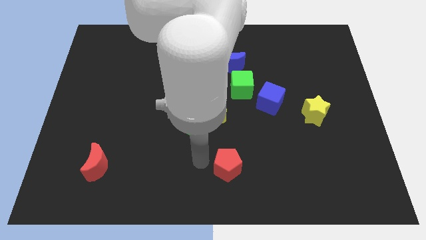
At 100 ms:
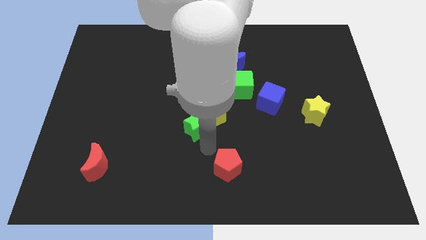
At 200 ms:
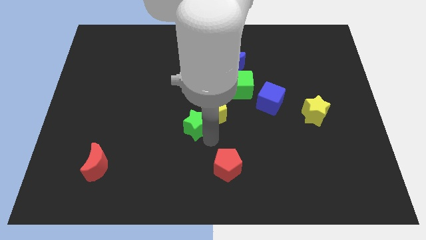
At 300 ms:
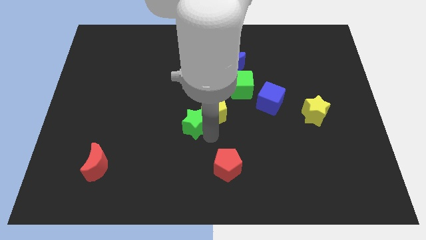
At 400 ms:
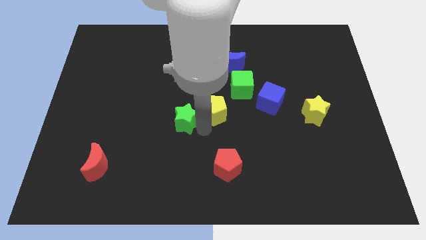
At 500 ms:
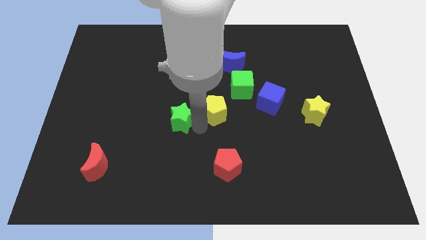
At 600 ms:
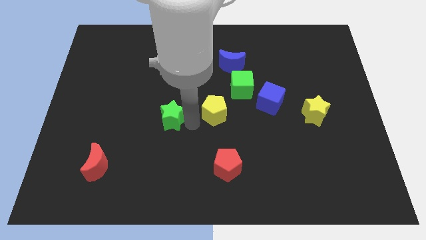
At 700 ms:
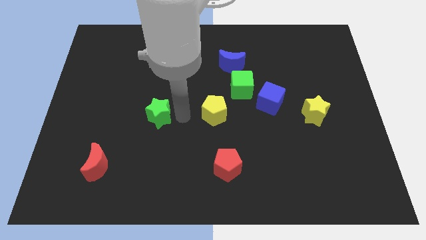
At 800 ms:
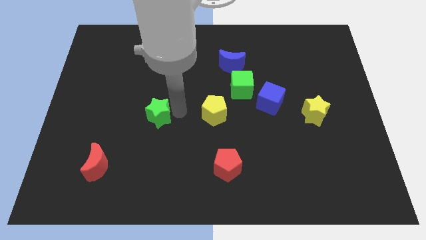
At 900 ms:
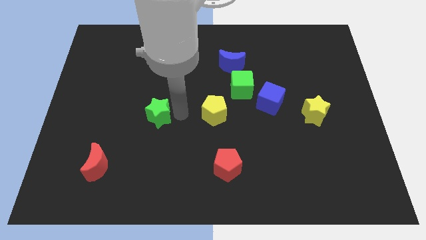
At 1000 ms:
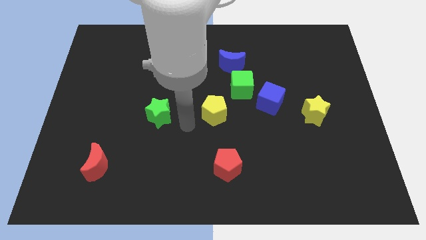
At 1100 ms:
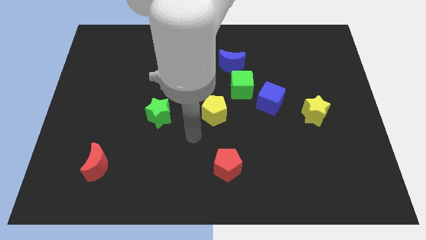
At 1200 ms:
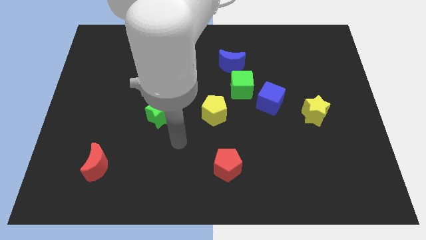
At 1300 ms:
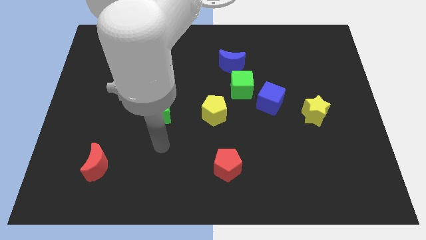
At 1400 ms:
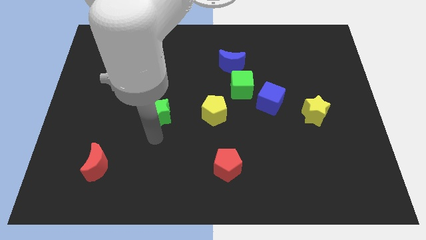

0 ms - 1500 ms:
place the green star to the left side of the yellow pentagon

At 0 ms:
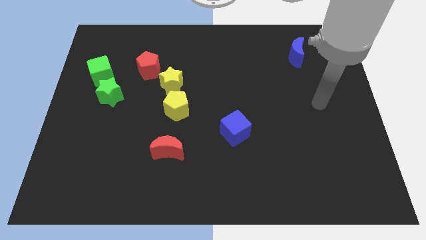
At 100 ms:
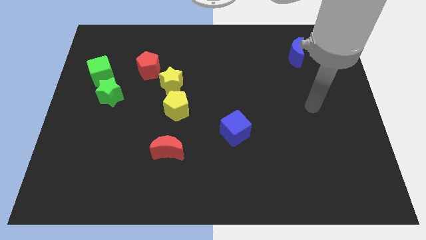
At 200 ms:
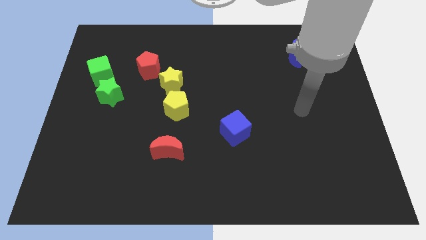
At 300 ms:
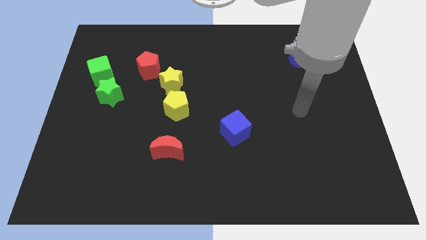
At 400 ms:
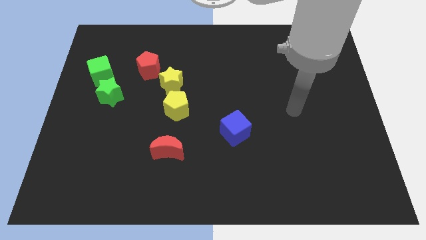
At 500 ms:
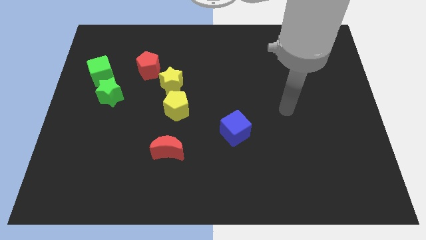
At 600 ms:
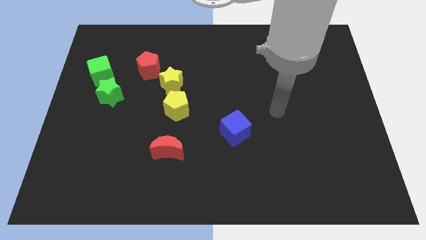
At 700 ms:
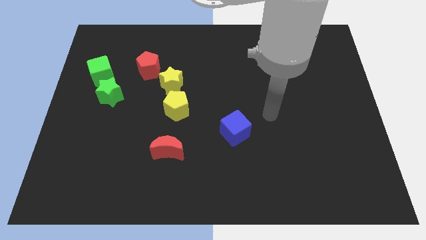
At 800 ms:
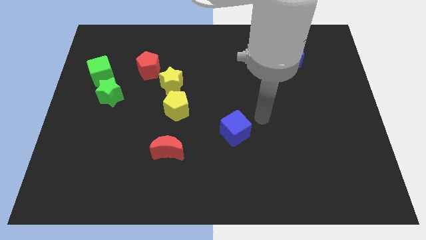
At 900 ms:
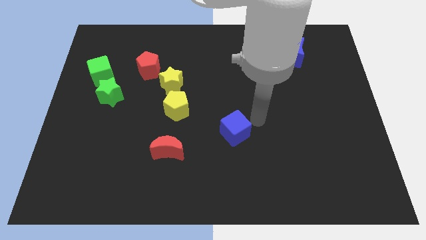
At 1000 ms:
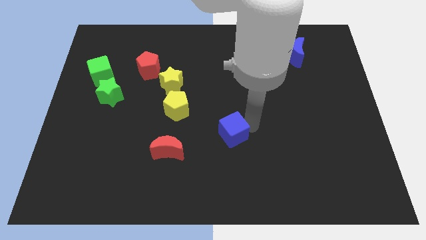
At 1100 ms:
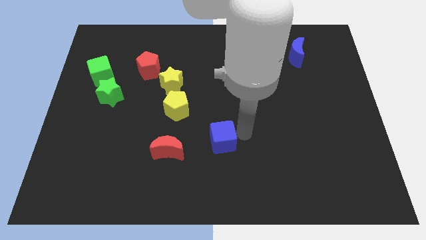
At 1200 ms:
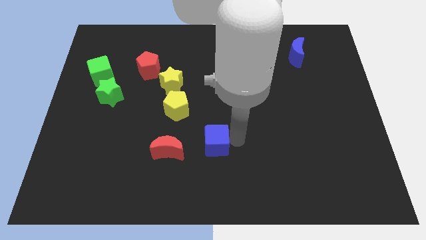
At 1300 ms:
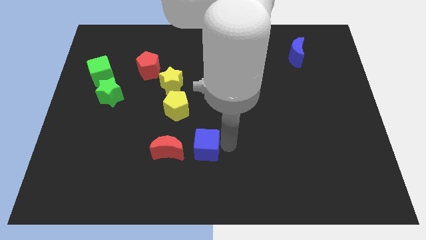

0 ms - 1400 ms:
move the blue cube to the right side of the red pentagon

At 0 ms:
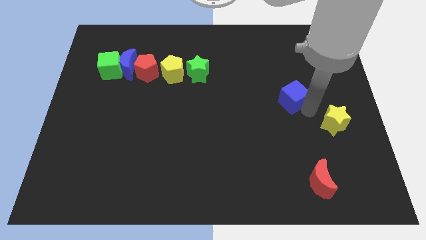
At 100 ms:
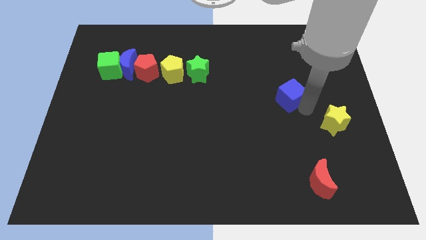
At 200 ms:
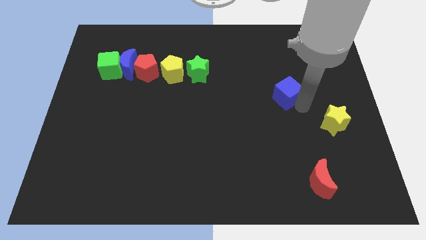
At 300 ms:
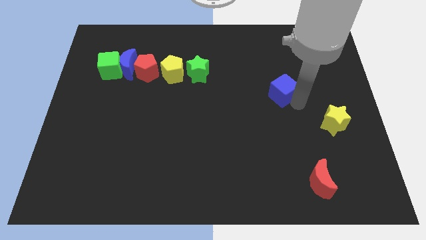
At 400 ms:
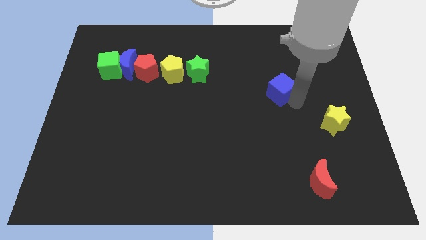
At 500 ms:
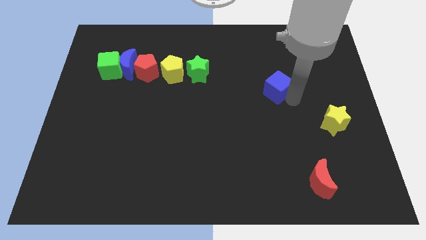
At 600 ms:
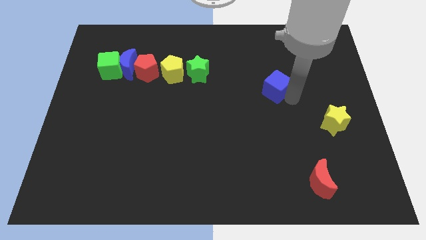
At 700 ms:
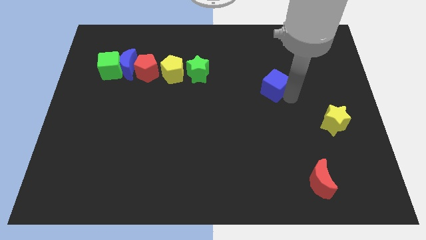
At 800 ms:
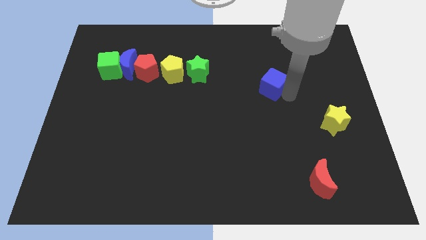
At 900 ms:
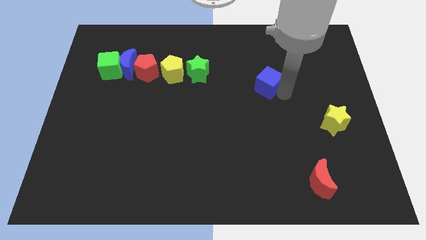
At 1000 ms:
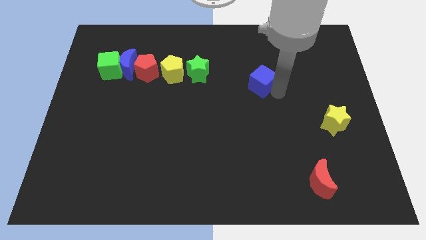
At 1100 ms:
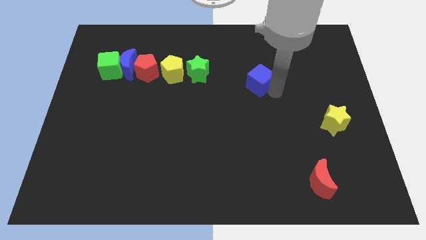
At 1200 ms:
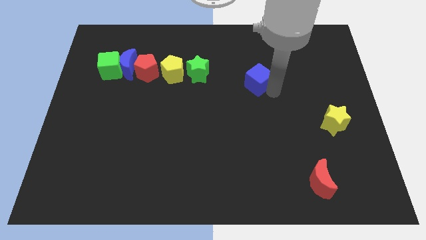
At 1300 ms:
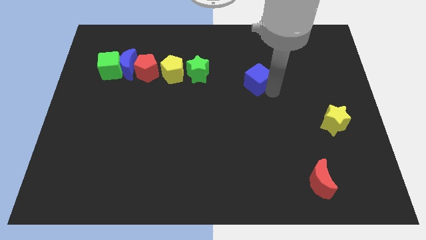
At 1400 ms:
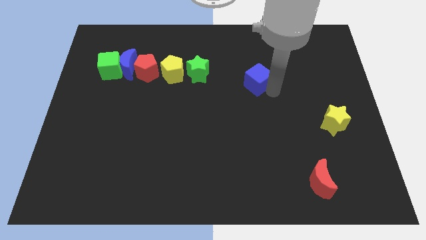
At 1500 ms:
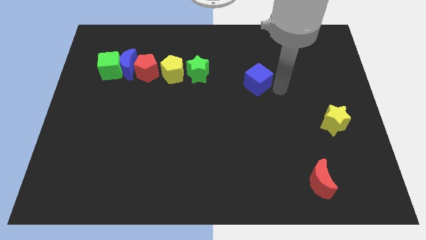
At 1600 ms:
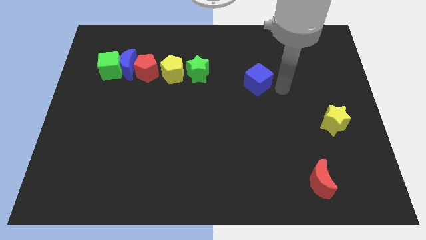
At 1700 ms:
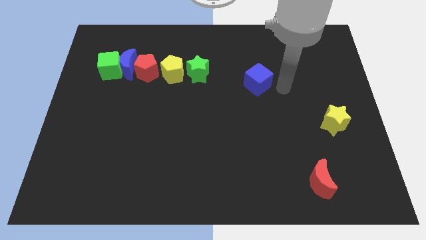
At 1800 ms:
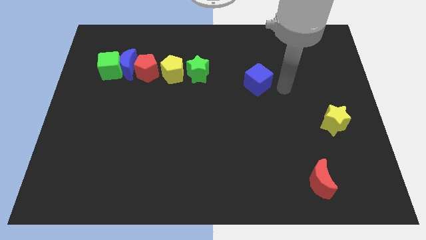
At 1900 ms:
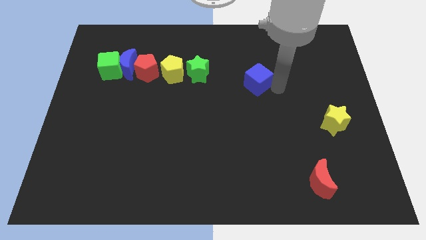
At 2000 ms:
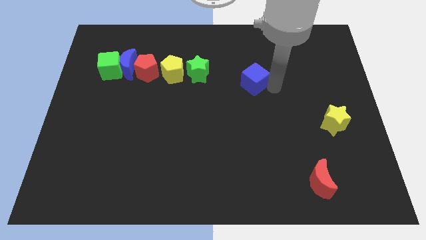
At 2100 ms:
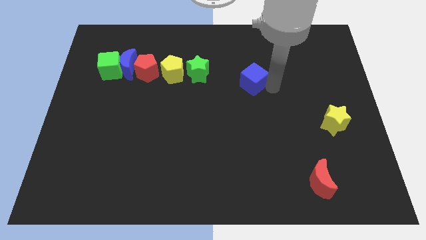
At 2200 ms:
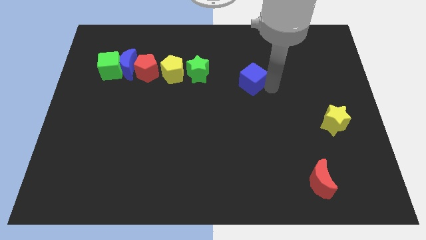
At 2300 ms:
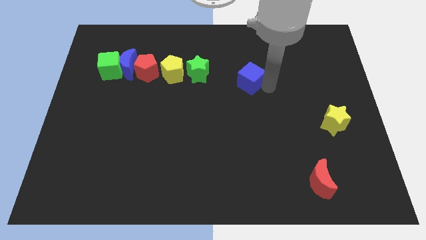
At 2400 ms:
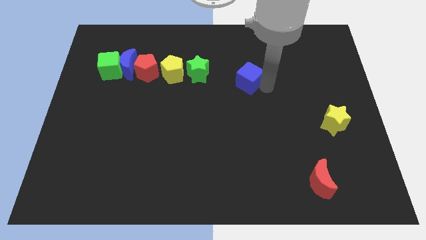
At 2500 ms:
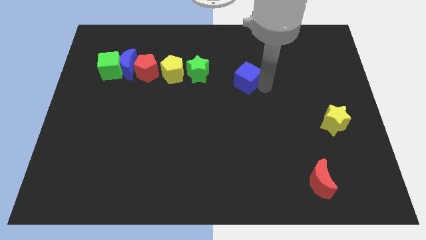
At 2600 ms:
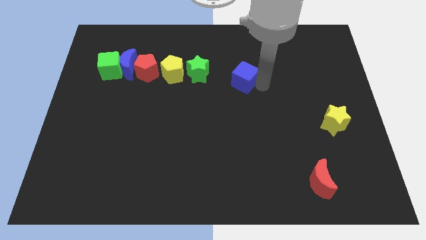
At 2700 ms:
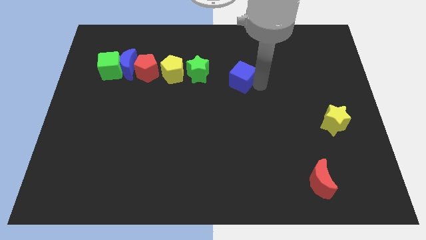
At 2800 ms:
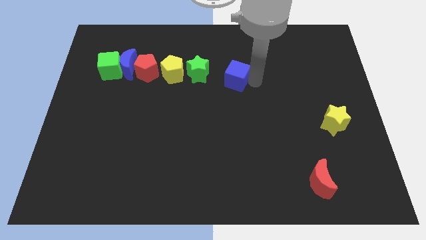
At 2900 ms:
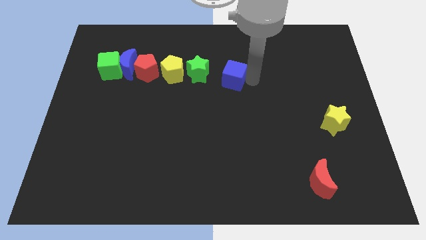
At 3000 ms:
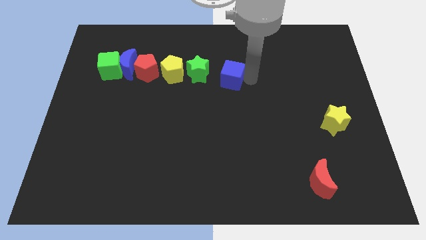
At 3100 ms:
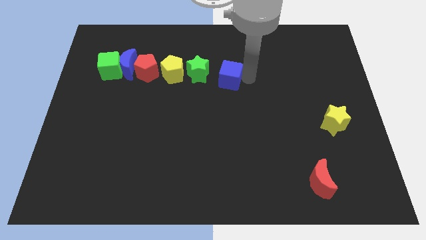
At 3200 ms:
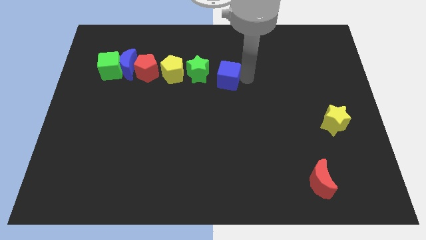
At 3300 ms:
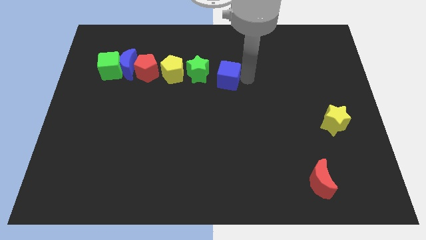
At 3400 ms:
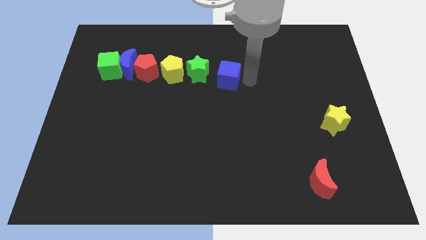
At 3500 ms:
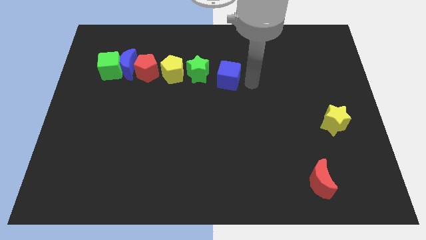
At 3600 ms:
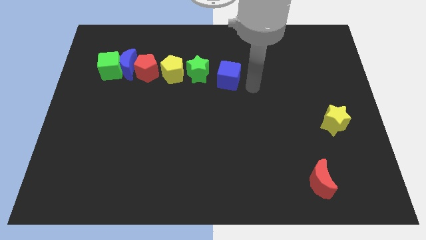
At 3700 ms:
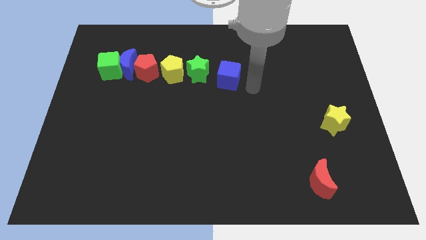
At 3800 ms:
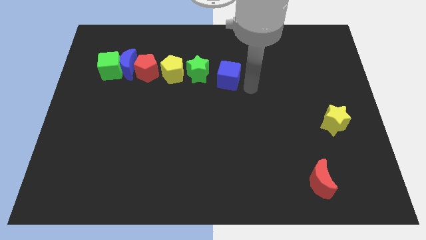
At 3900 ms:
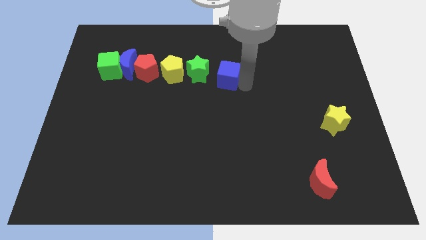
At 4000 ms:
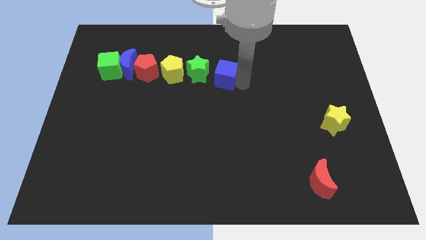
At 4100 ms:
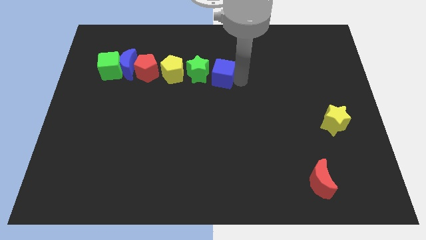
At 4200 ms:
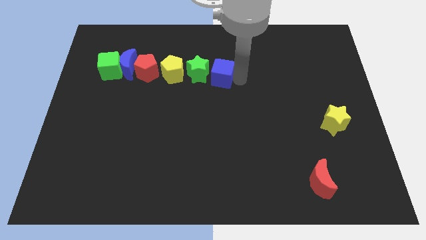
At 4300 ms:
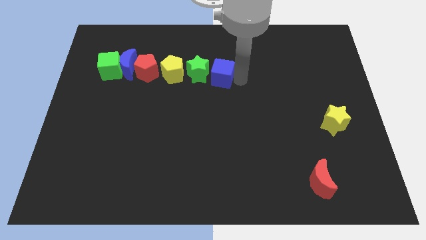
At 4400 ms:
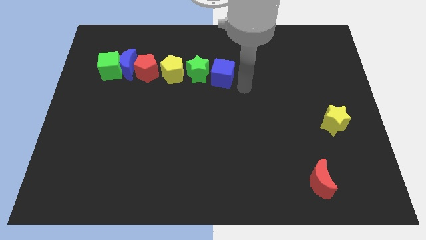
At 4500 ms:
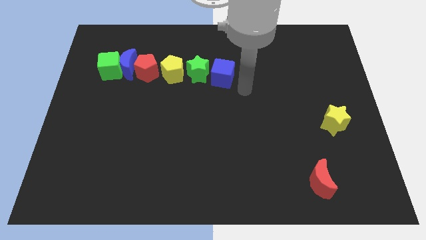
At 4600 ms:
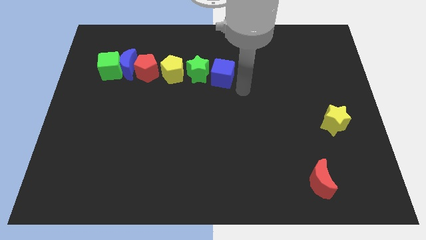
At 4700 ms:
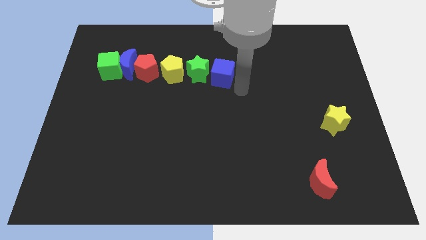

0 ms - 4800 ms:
move the blue cube to the right of the green star

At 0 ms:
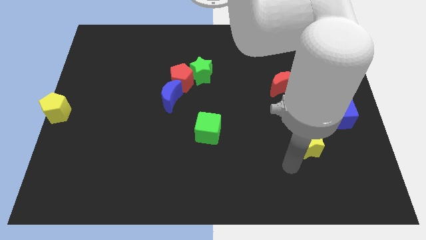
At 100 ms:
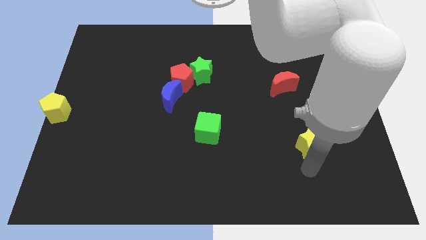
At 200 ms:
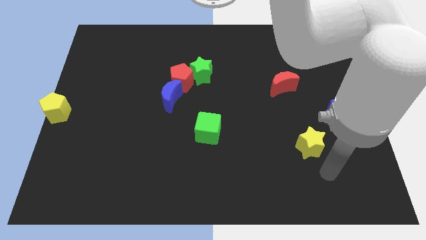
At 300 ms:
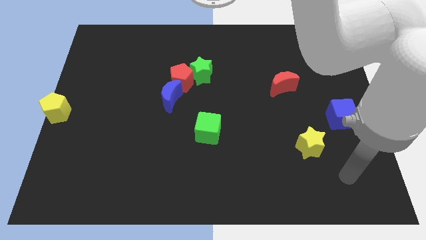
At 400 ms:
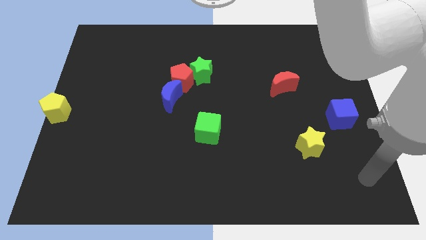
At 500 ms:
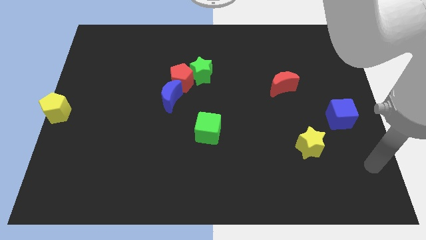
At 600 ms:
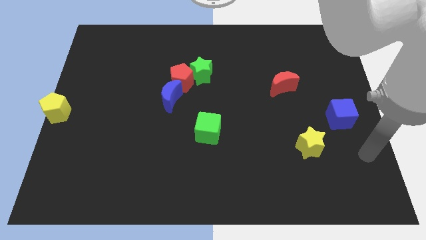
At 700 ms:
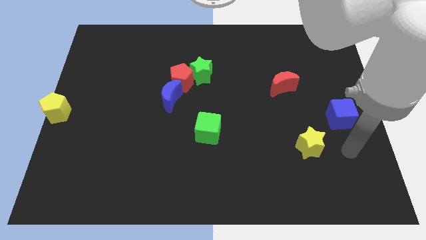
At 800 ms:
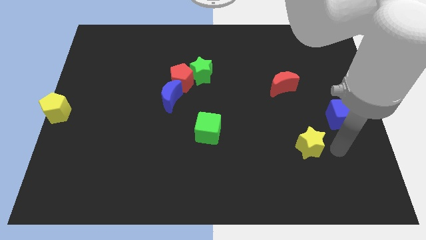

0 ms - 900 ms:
move your arm away from the green cube

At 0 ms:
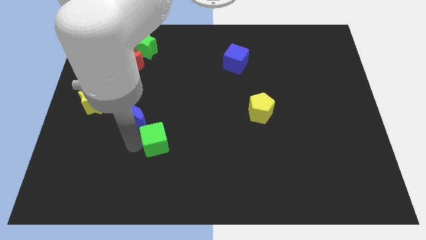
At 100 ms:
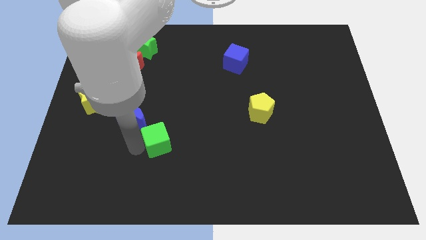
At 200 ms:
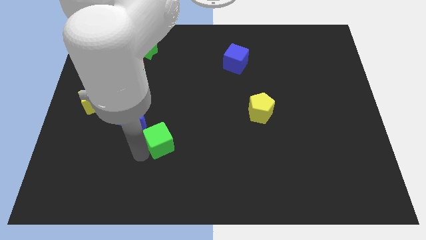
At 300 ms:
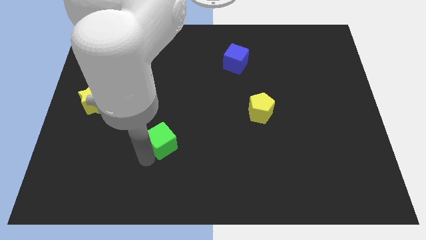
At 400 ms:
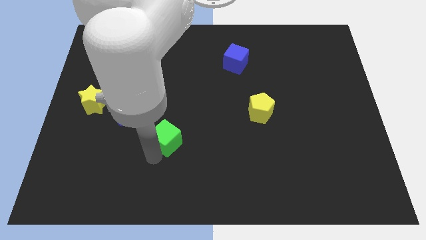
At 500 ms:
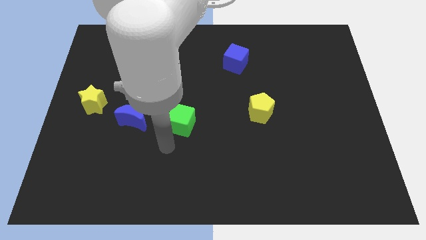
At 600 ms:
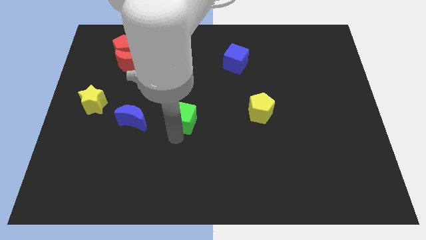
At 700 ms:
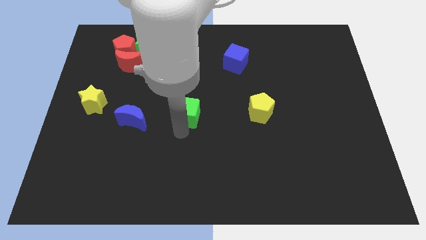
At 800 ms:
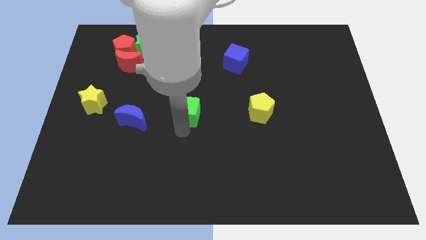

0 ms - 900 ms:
push the green cube to the center of the board
